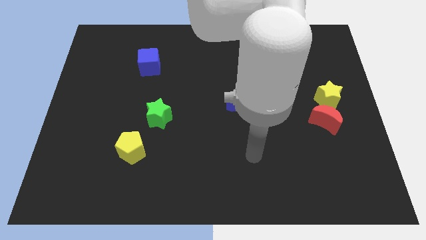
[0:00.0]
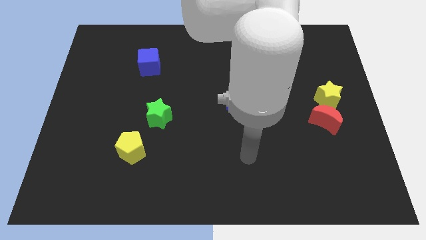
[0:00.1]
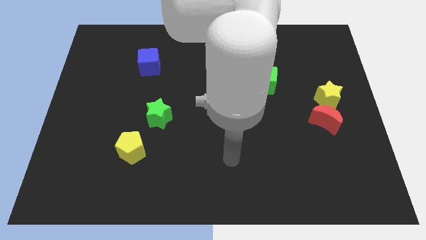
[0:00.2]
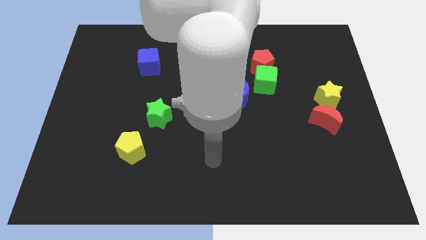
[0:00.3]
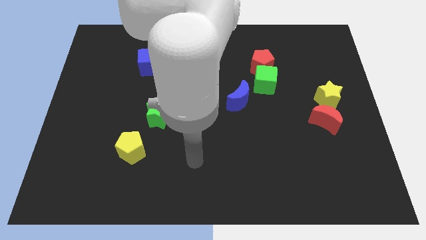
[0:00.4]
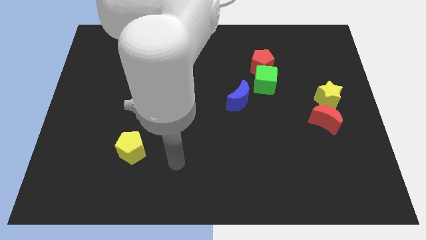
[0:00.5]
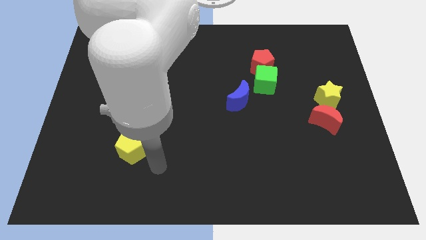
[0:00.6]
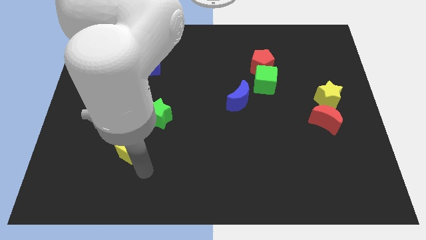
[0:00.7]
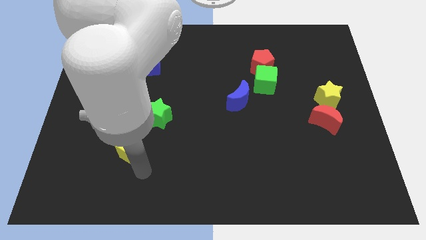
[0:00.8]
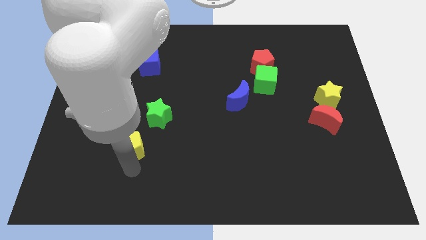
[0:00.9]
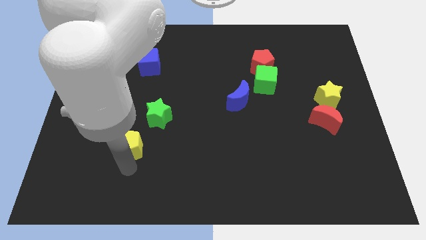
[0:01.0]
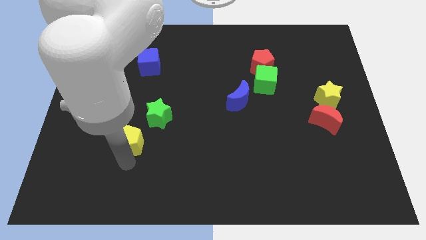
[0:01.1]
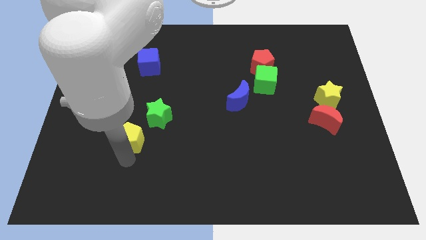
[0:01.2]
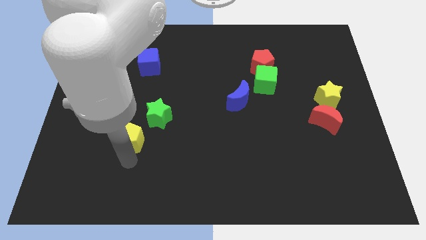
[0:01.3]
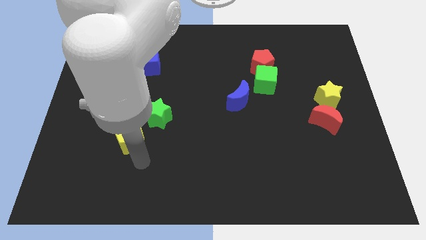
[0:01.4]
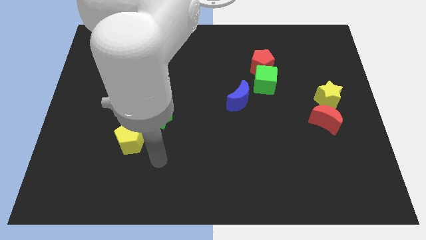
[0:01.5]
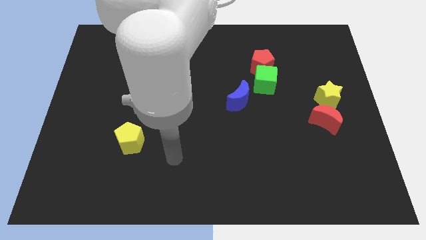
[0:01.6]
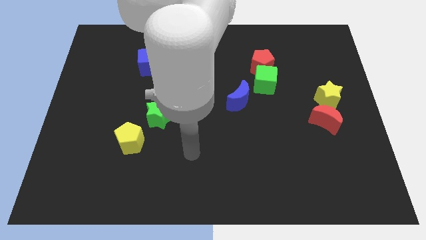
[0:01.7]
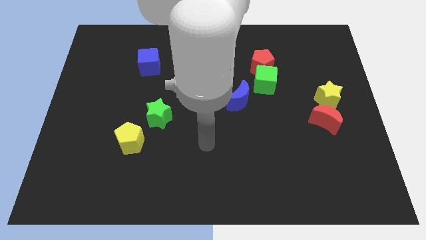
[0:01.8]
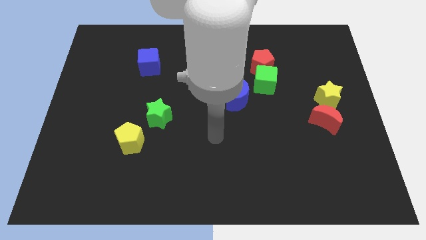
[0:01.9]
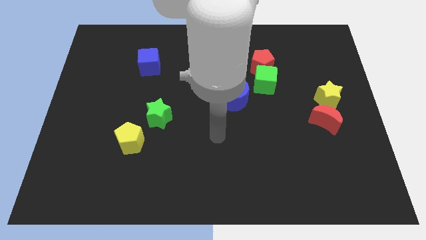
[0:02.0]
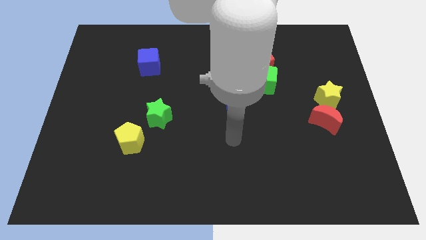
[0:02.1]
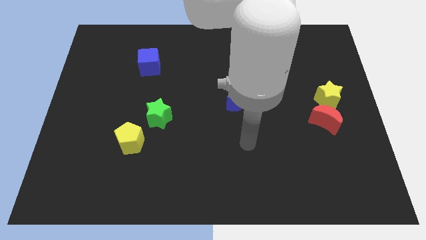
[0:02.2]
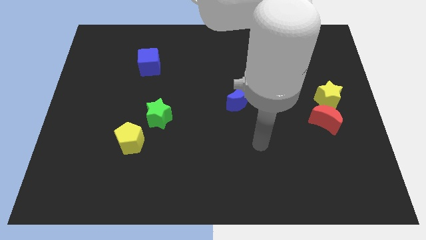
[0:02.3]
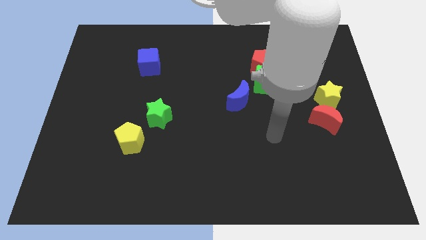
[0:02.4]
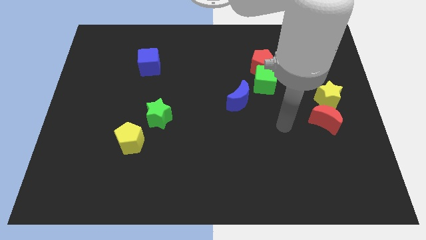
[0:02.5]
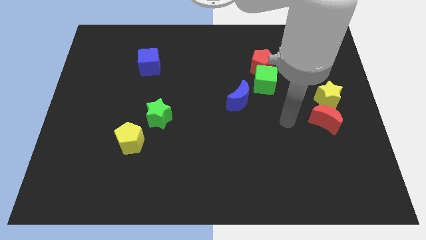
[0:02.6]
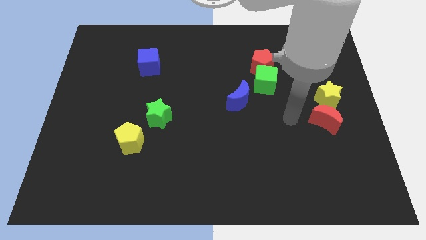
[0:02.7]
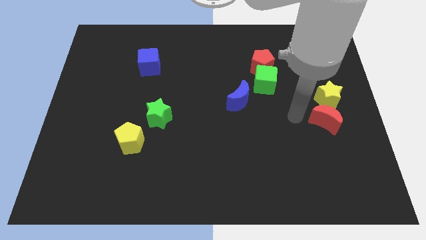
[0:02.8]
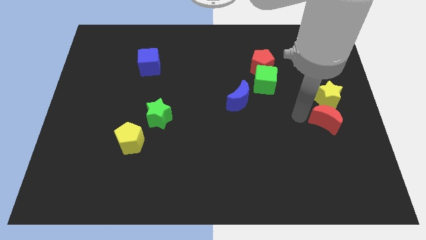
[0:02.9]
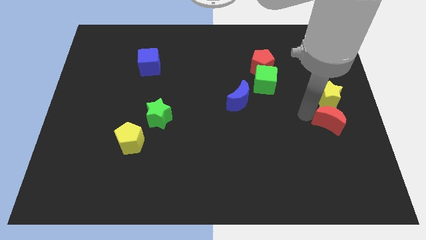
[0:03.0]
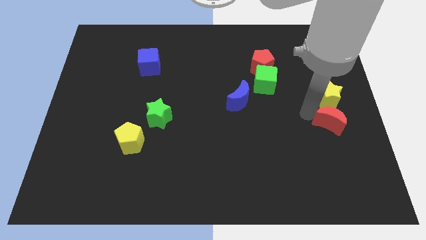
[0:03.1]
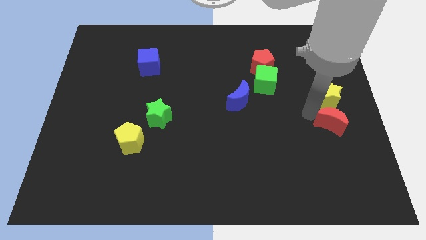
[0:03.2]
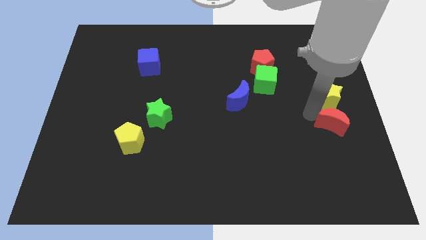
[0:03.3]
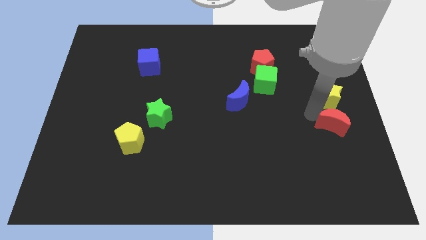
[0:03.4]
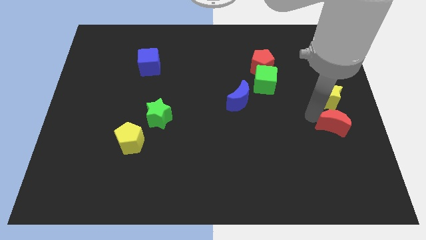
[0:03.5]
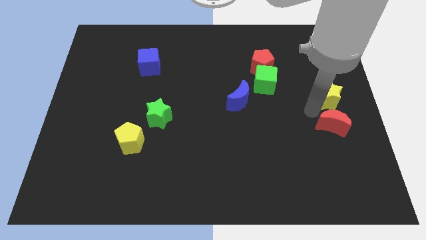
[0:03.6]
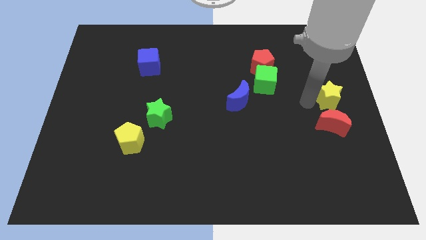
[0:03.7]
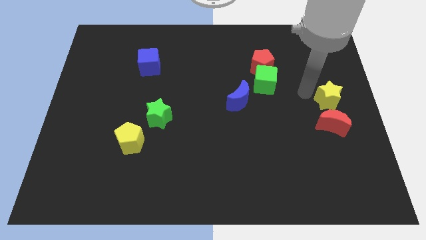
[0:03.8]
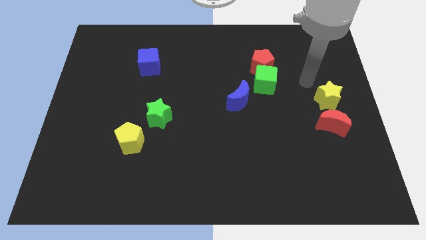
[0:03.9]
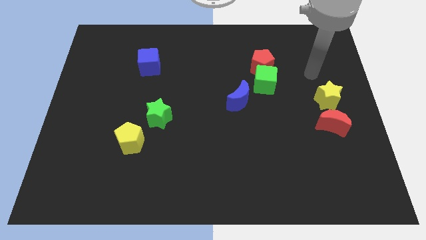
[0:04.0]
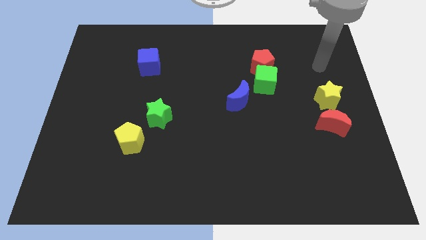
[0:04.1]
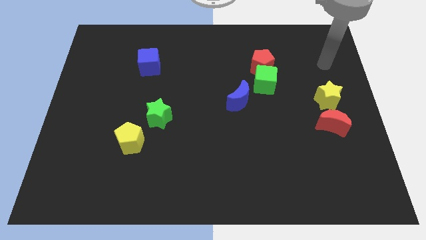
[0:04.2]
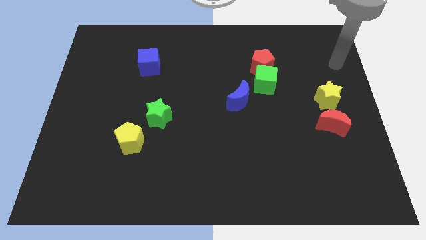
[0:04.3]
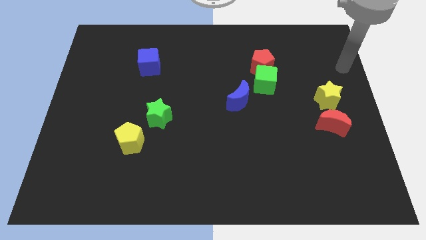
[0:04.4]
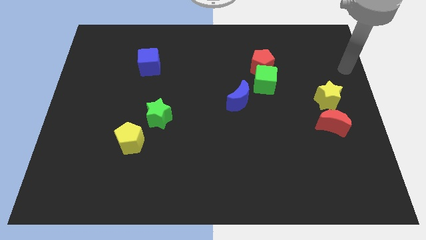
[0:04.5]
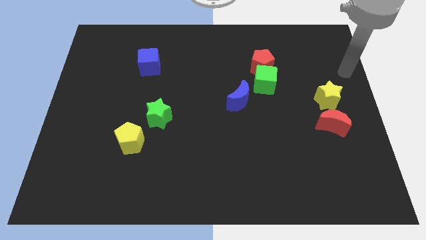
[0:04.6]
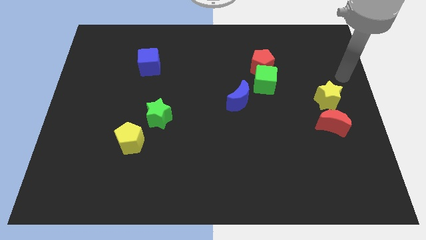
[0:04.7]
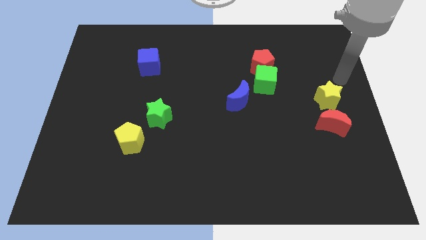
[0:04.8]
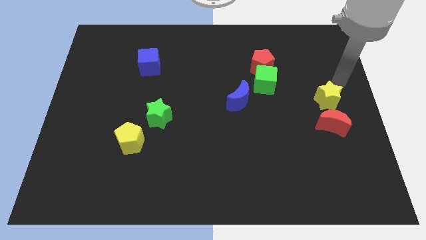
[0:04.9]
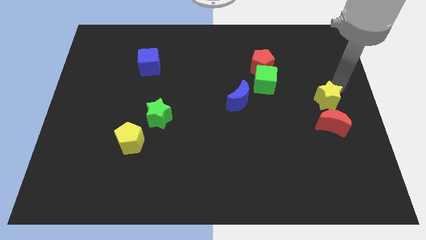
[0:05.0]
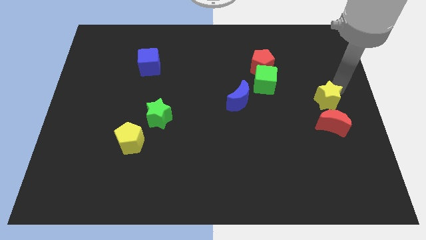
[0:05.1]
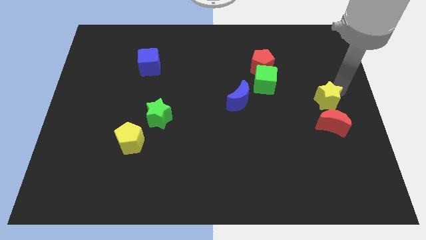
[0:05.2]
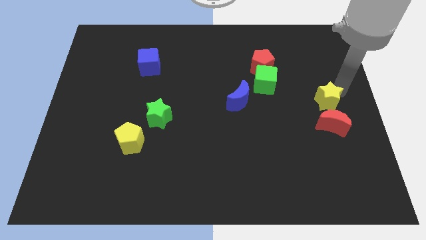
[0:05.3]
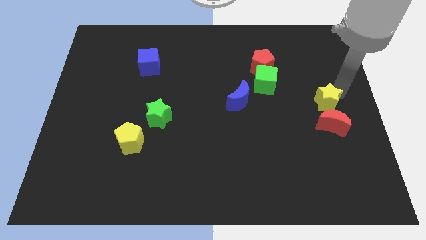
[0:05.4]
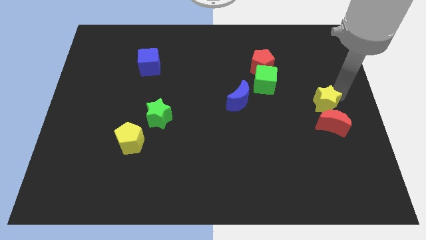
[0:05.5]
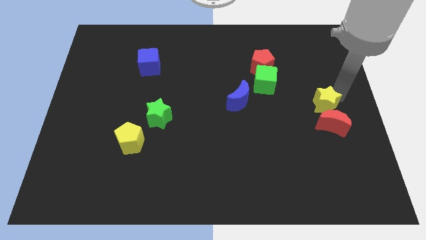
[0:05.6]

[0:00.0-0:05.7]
move your arm close to the yellow star

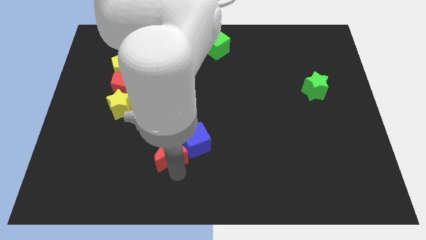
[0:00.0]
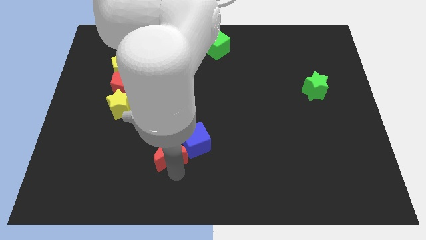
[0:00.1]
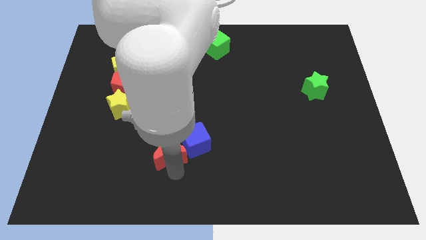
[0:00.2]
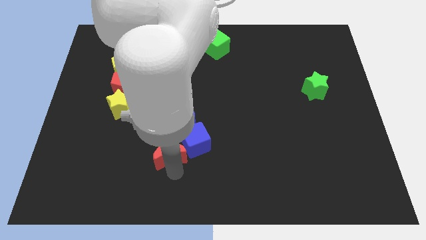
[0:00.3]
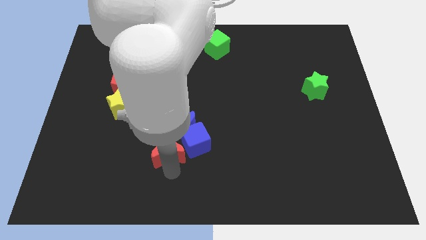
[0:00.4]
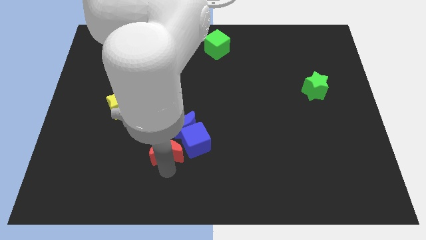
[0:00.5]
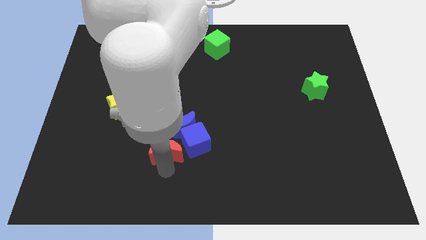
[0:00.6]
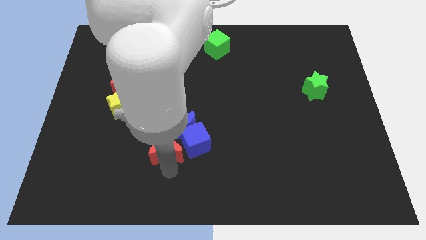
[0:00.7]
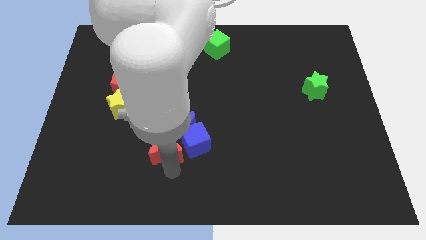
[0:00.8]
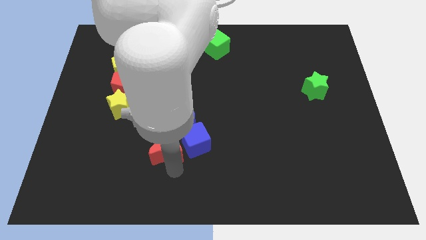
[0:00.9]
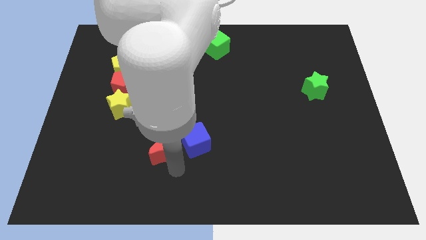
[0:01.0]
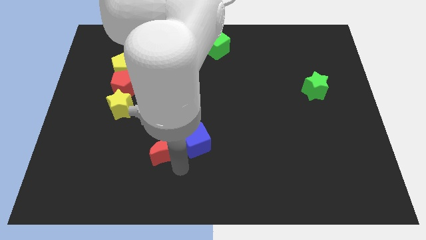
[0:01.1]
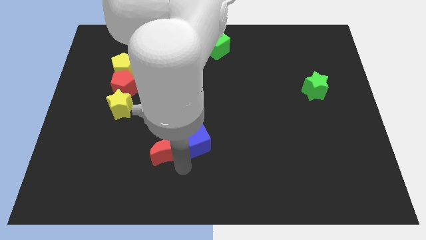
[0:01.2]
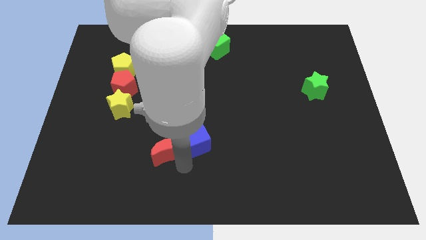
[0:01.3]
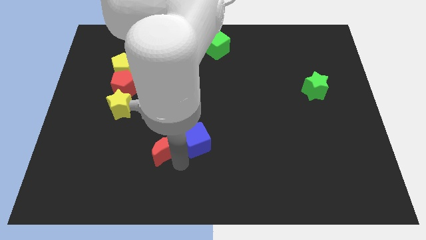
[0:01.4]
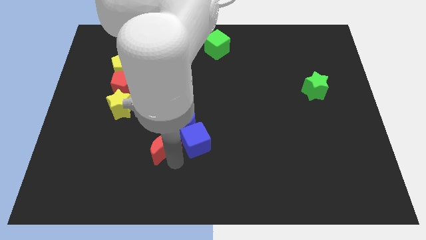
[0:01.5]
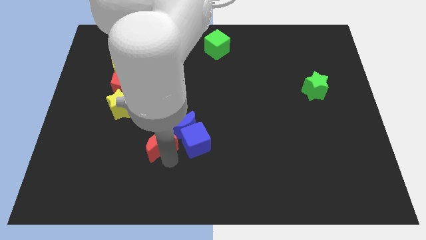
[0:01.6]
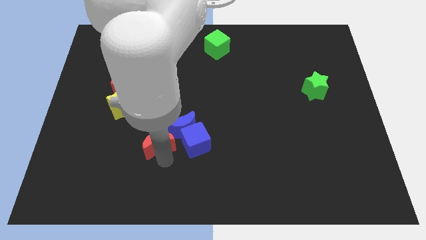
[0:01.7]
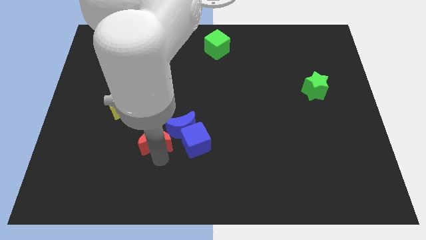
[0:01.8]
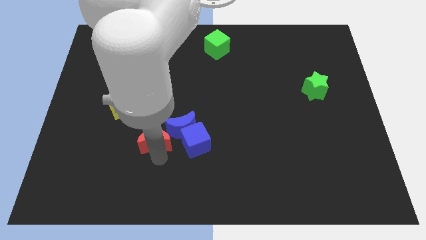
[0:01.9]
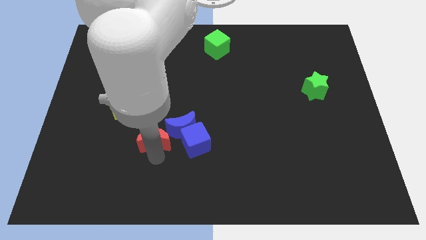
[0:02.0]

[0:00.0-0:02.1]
put the red moon left to the blue cube

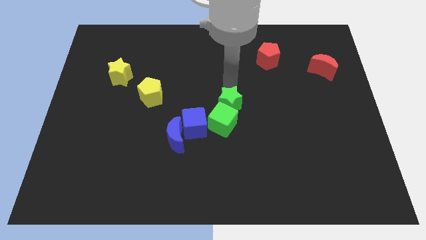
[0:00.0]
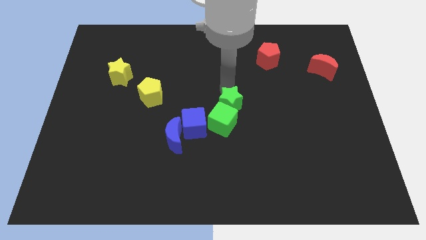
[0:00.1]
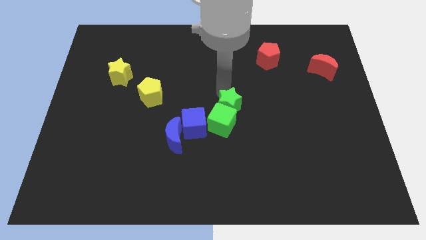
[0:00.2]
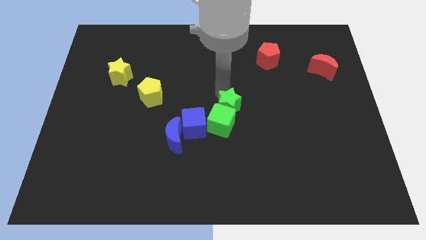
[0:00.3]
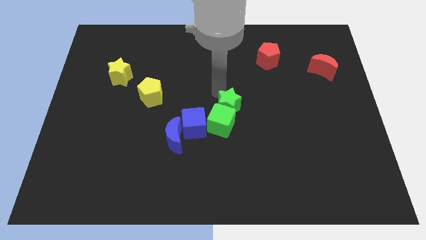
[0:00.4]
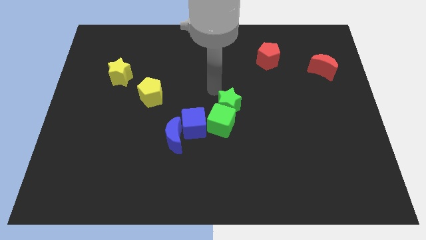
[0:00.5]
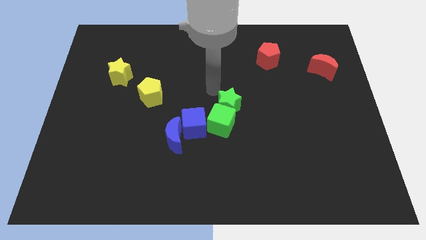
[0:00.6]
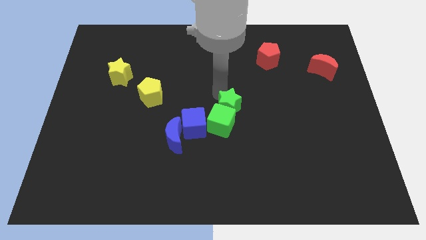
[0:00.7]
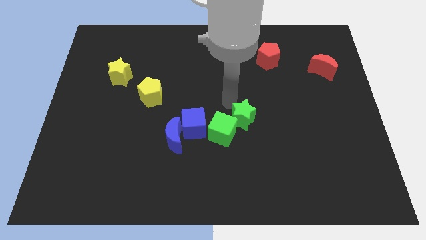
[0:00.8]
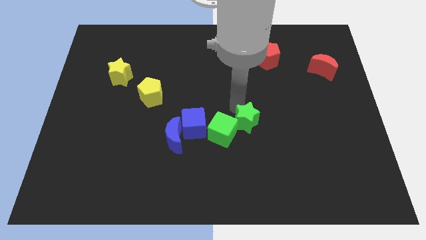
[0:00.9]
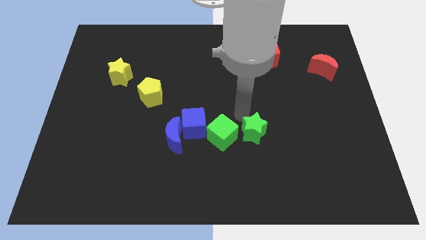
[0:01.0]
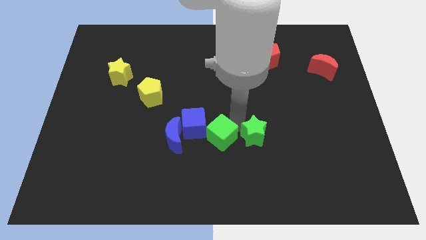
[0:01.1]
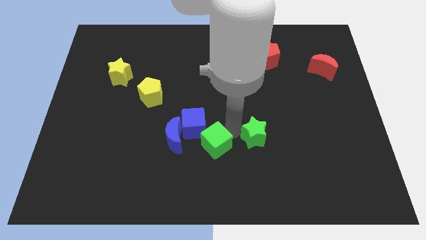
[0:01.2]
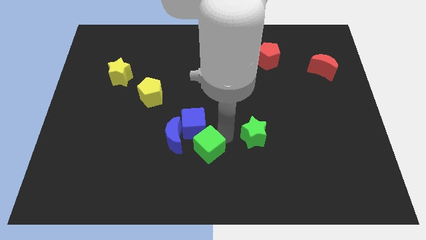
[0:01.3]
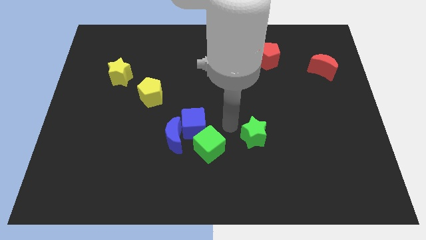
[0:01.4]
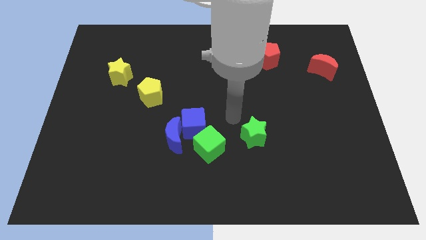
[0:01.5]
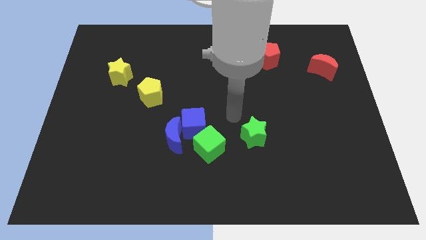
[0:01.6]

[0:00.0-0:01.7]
push the green star towards the right side of the green cube
